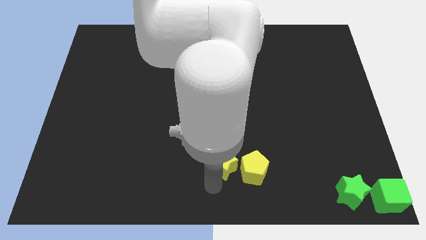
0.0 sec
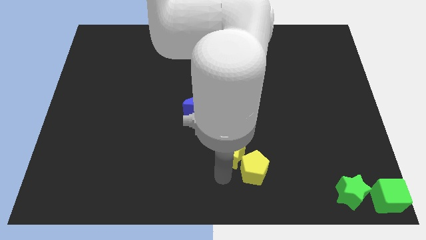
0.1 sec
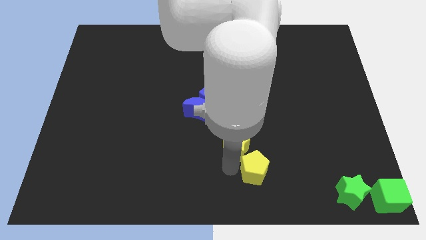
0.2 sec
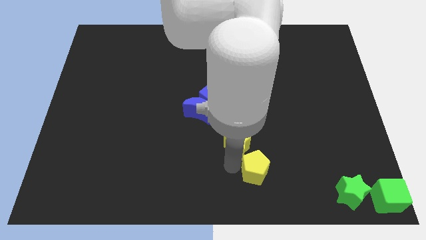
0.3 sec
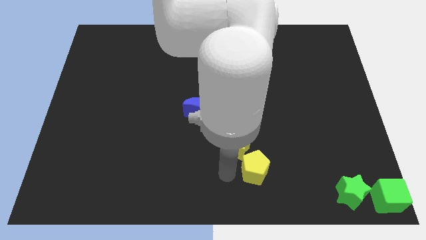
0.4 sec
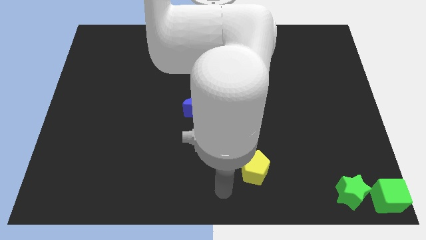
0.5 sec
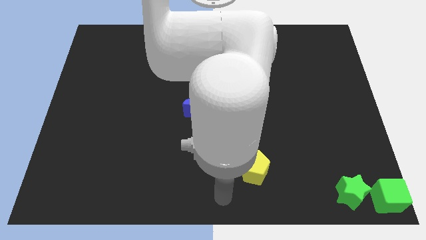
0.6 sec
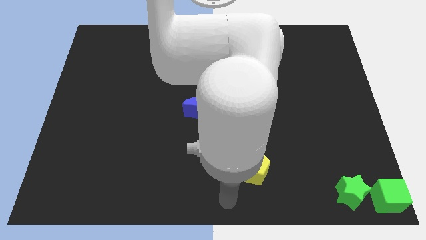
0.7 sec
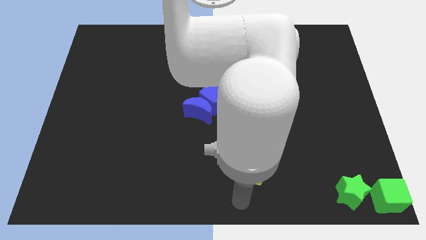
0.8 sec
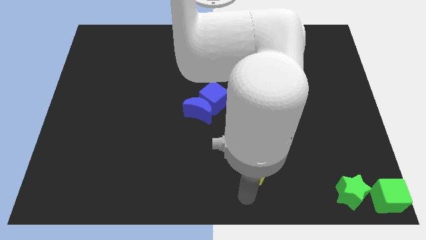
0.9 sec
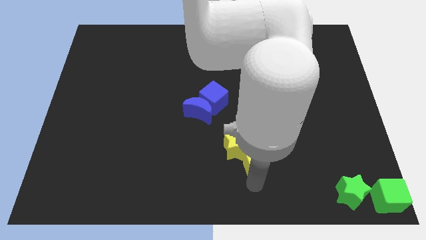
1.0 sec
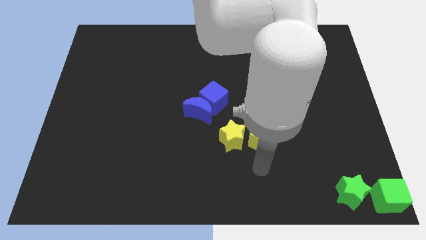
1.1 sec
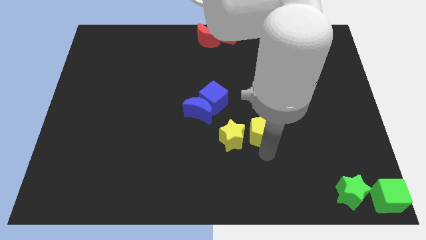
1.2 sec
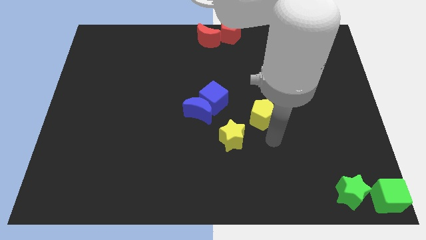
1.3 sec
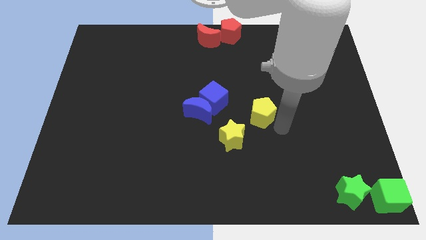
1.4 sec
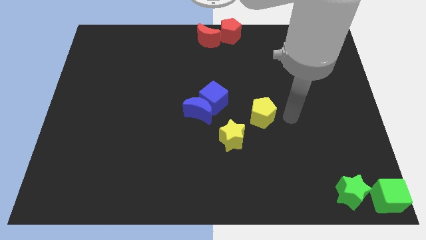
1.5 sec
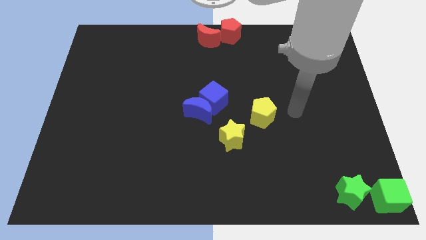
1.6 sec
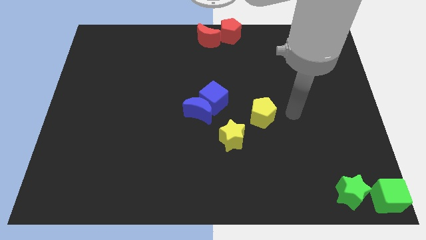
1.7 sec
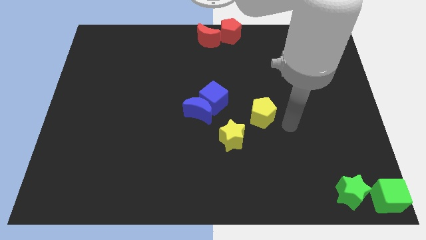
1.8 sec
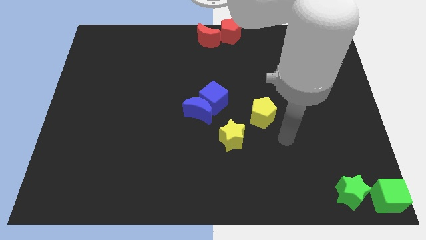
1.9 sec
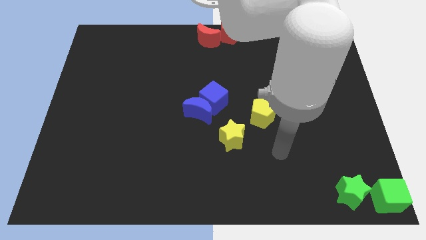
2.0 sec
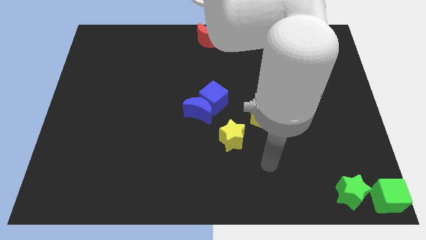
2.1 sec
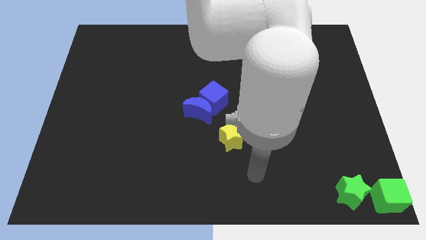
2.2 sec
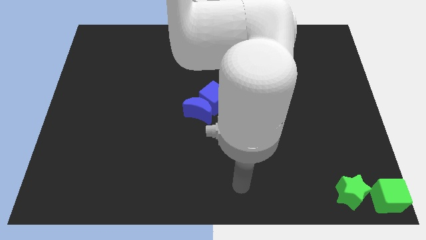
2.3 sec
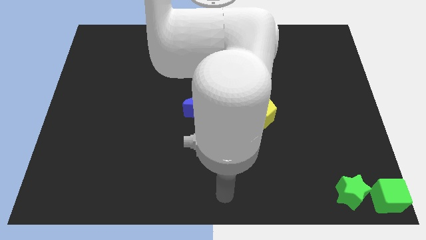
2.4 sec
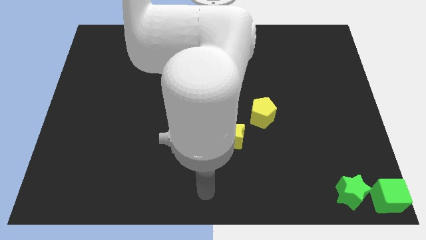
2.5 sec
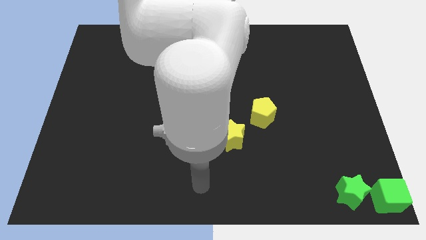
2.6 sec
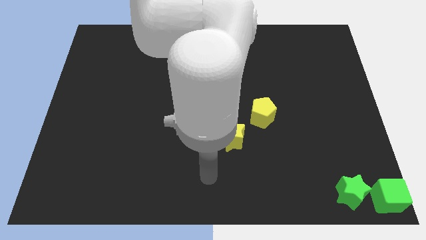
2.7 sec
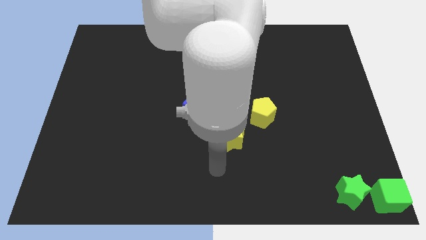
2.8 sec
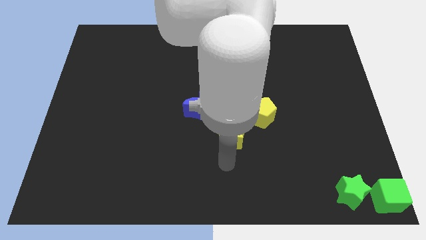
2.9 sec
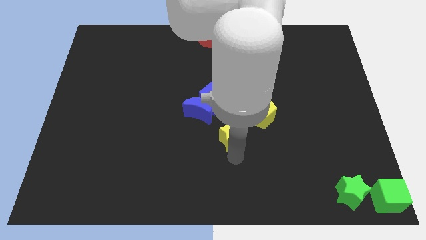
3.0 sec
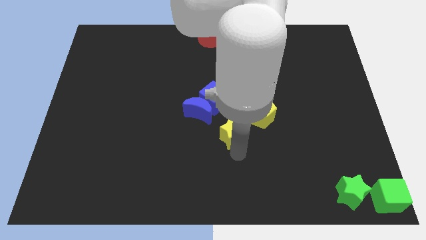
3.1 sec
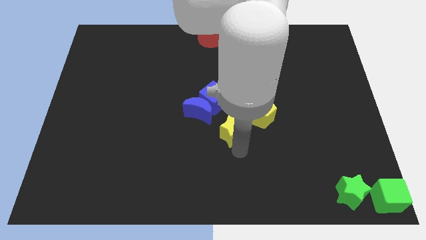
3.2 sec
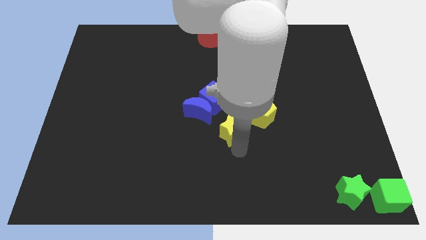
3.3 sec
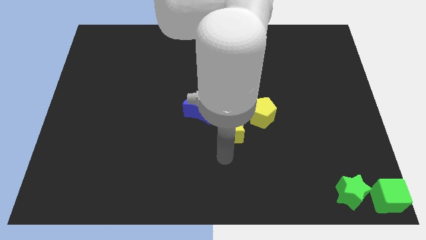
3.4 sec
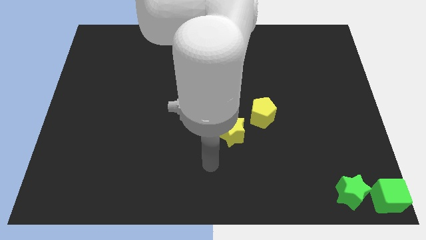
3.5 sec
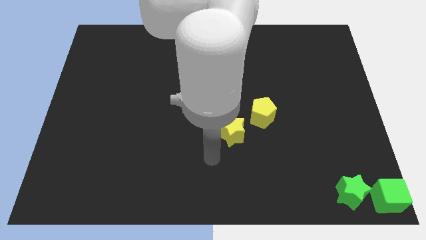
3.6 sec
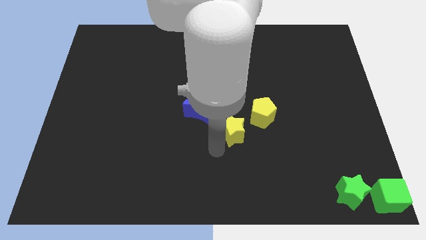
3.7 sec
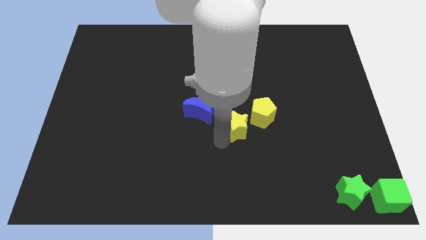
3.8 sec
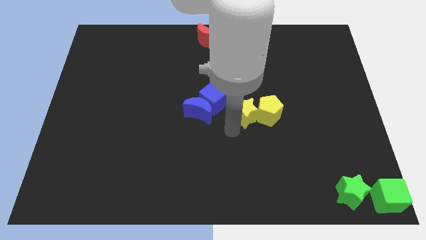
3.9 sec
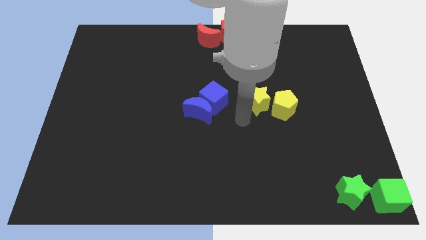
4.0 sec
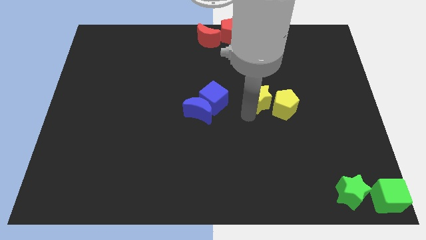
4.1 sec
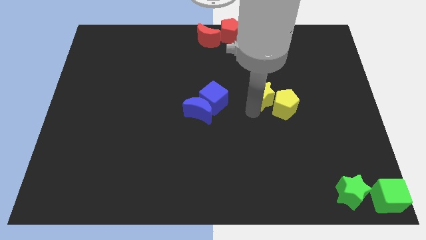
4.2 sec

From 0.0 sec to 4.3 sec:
move the yellow blocks to the top of the board

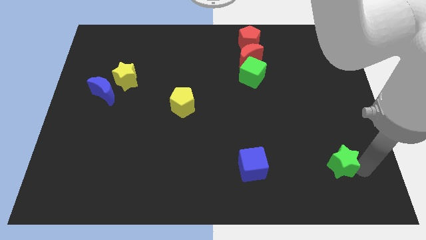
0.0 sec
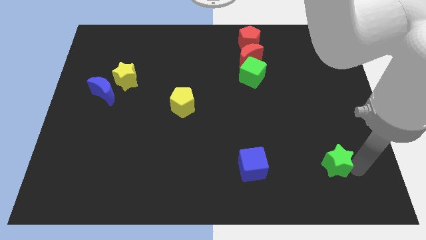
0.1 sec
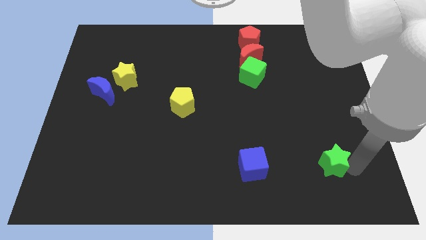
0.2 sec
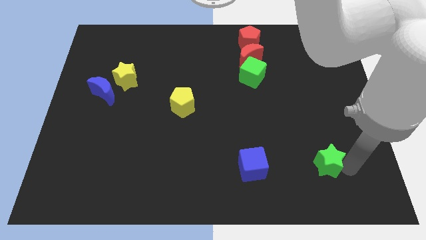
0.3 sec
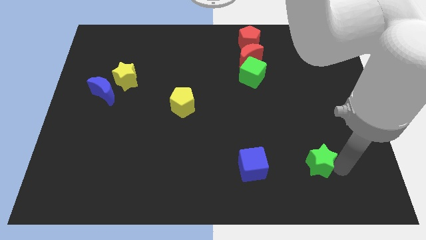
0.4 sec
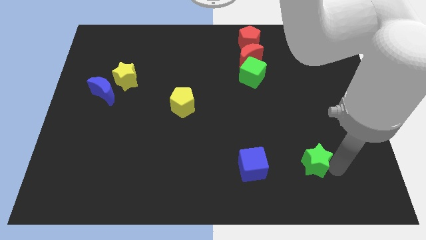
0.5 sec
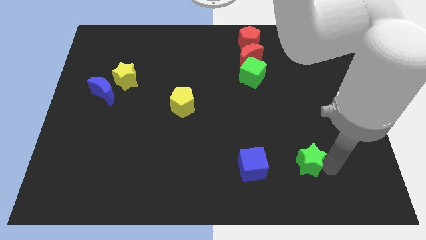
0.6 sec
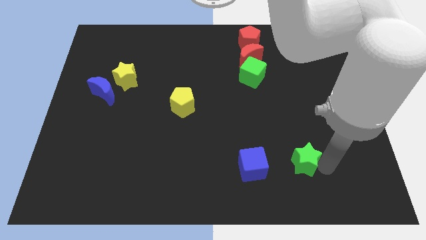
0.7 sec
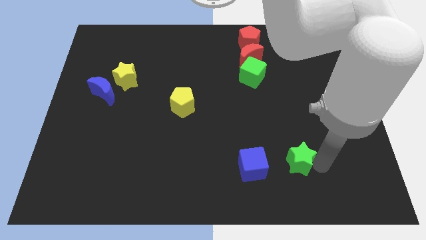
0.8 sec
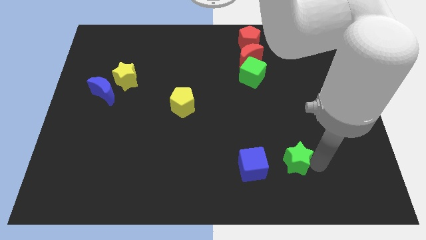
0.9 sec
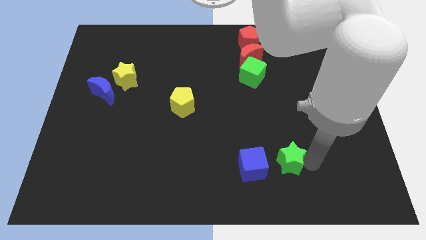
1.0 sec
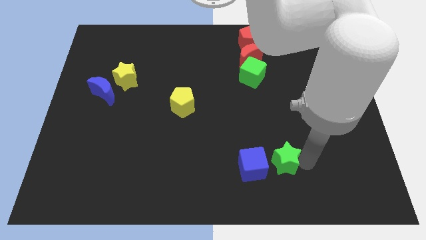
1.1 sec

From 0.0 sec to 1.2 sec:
place green star to the right side of blue cube

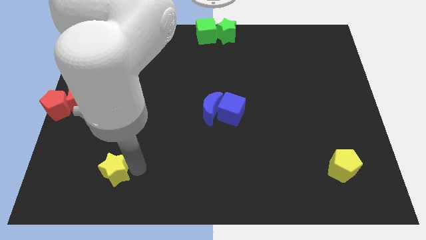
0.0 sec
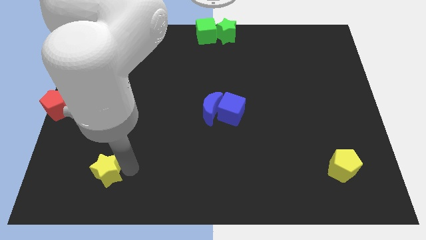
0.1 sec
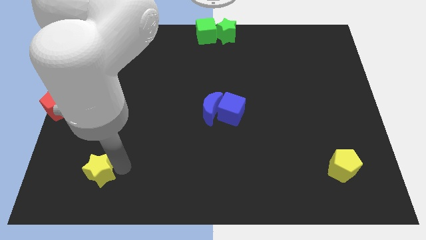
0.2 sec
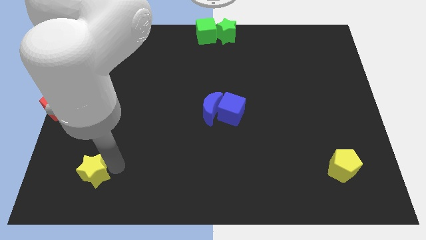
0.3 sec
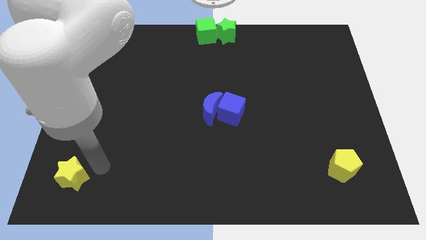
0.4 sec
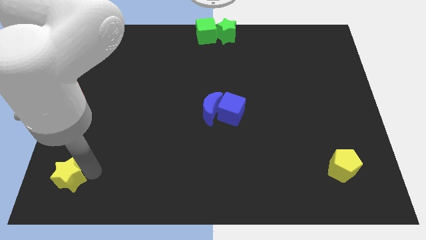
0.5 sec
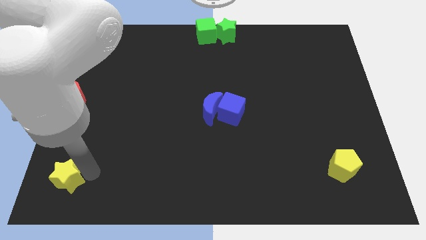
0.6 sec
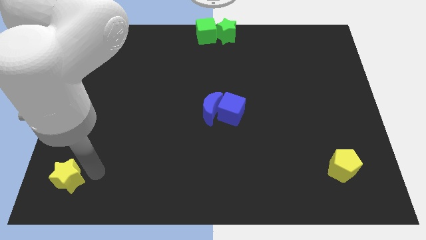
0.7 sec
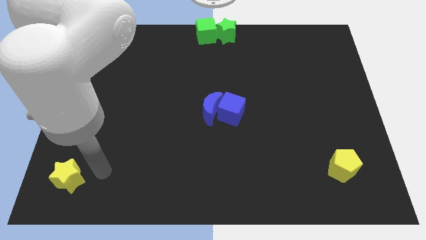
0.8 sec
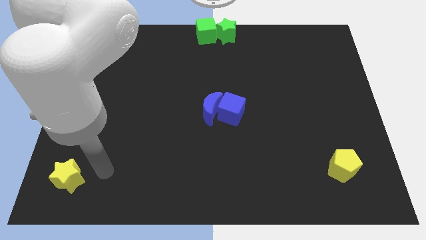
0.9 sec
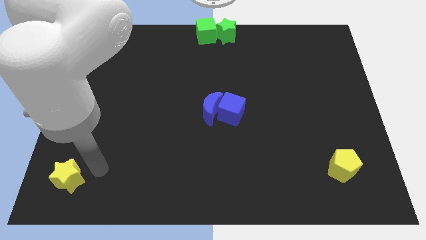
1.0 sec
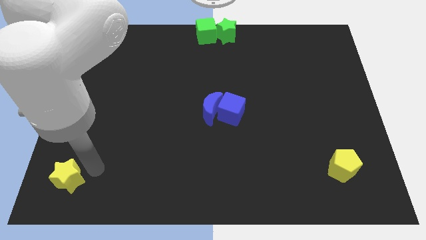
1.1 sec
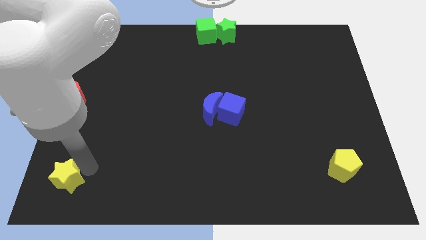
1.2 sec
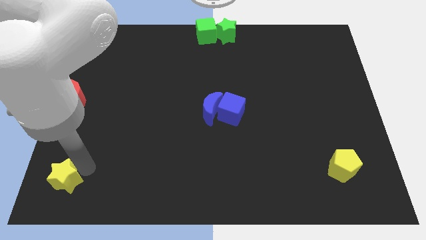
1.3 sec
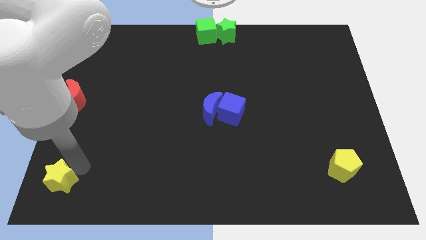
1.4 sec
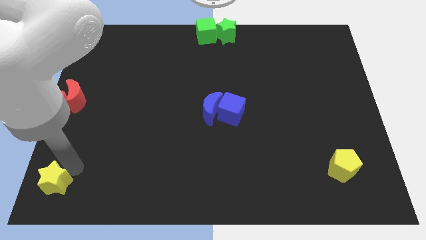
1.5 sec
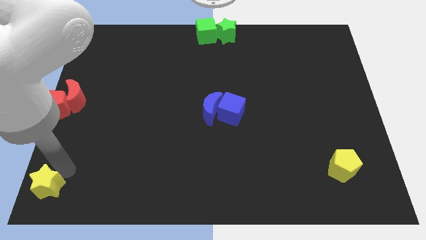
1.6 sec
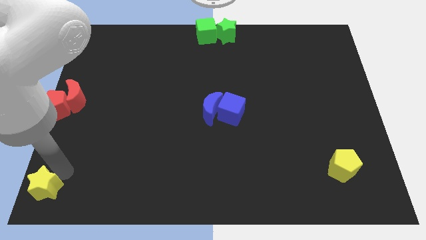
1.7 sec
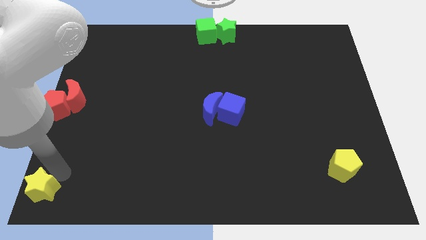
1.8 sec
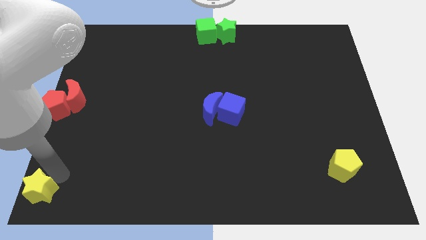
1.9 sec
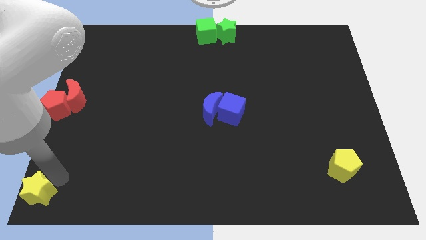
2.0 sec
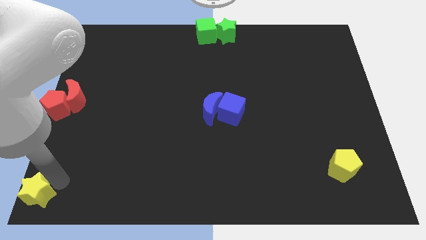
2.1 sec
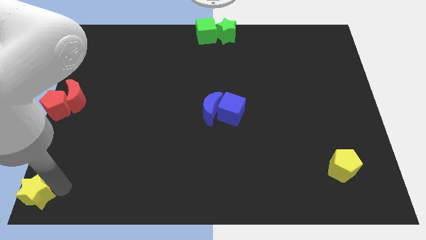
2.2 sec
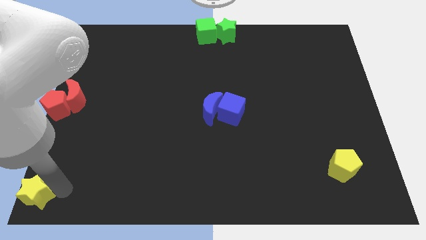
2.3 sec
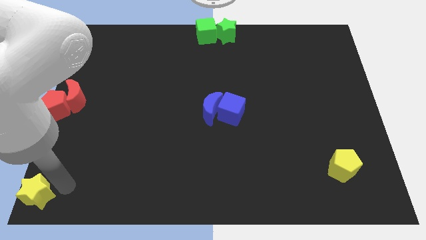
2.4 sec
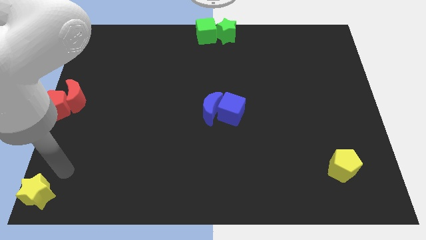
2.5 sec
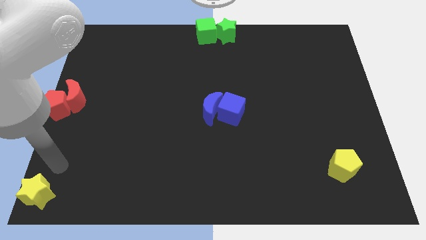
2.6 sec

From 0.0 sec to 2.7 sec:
place the yellow star to the bottom left corner of the board

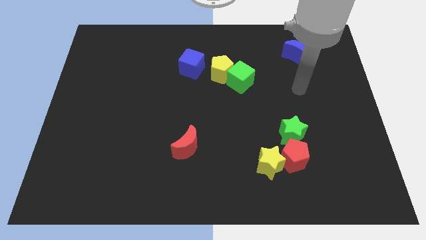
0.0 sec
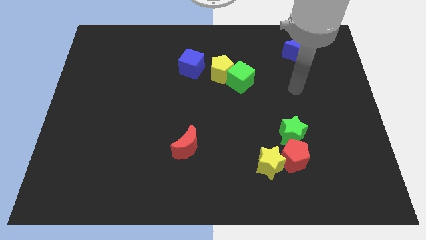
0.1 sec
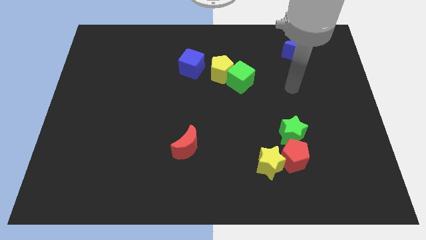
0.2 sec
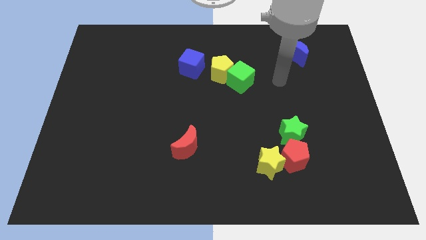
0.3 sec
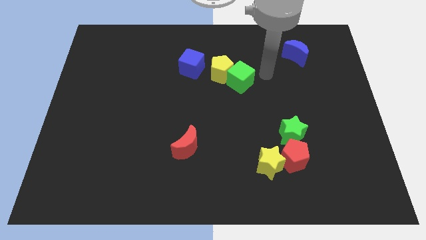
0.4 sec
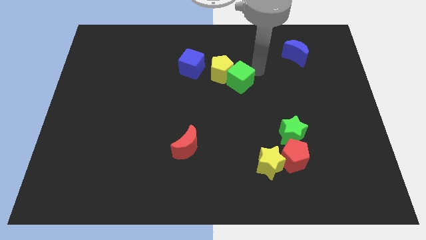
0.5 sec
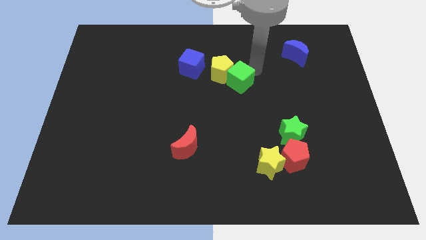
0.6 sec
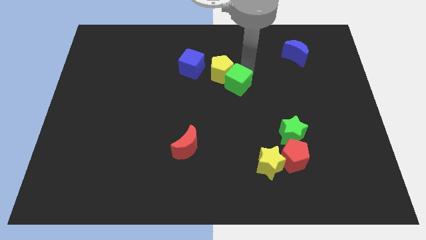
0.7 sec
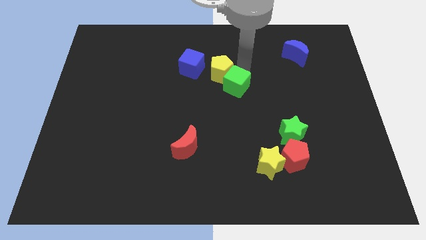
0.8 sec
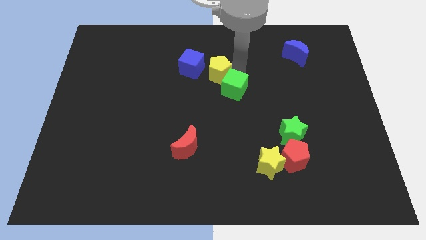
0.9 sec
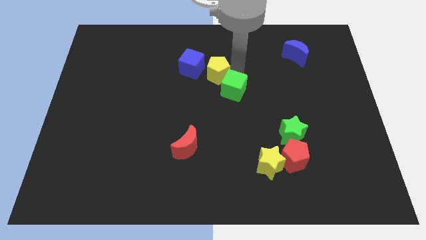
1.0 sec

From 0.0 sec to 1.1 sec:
push the green cube slightly down
